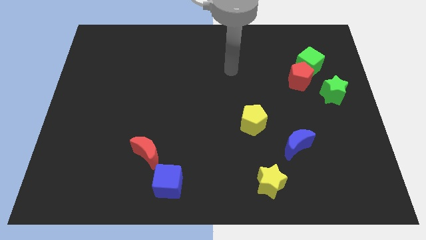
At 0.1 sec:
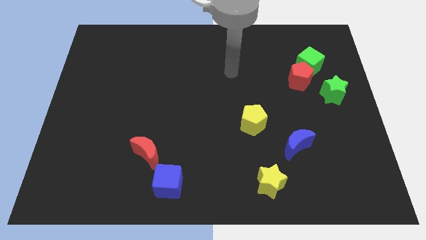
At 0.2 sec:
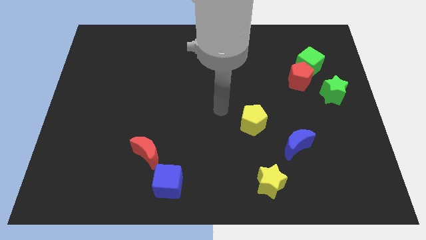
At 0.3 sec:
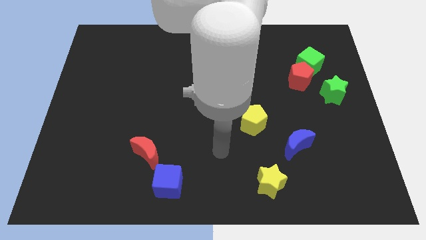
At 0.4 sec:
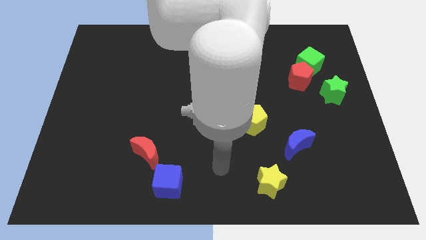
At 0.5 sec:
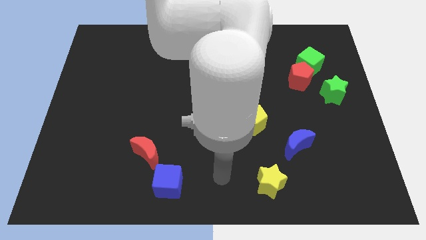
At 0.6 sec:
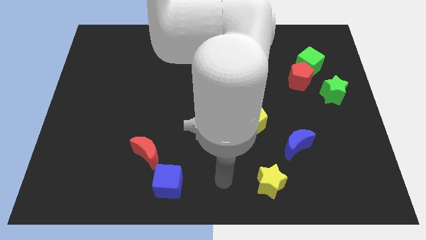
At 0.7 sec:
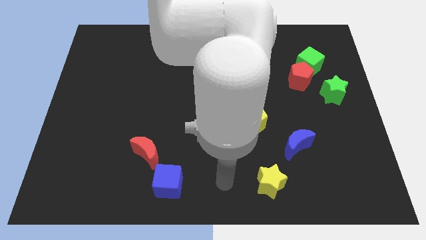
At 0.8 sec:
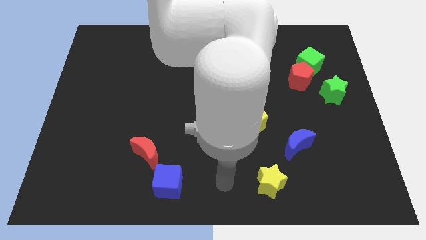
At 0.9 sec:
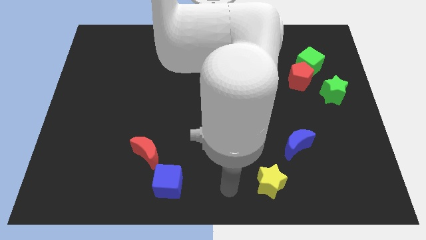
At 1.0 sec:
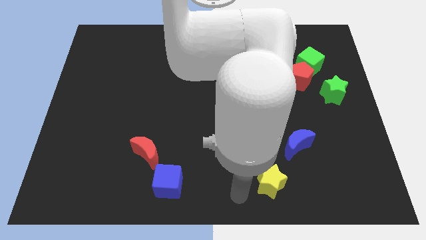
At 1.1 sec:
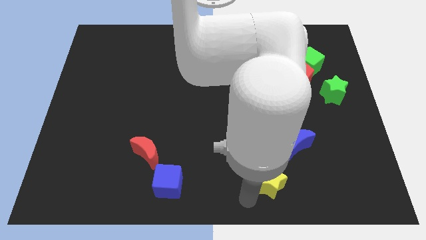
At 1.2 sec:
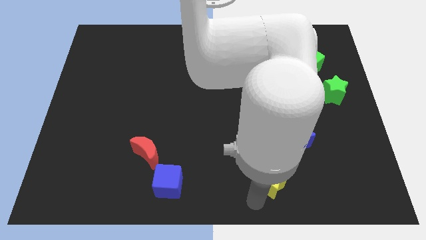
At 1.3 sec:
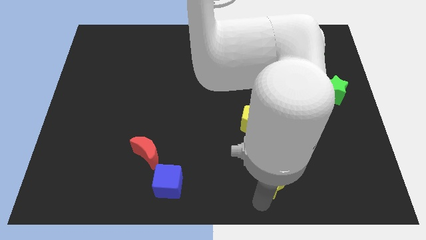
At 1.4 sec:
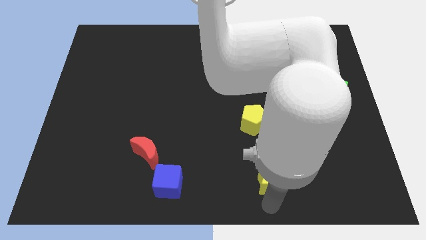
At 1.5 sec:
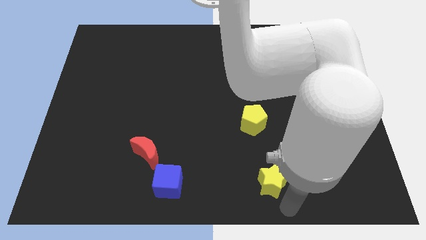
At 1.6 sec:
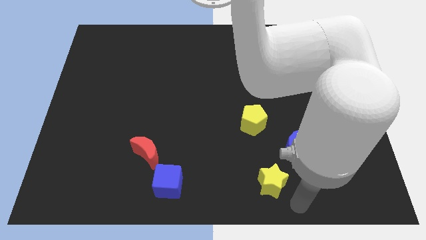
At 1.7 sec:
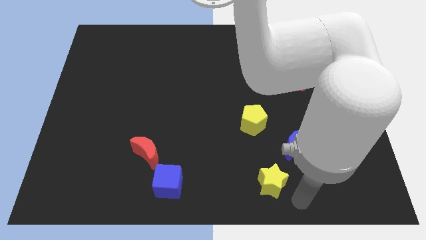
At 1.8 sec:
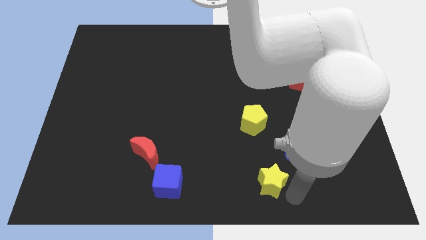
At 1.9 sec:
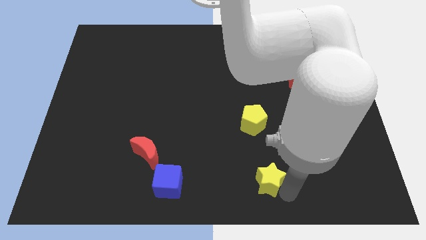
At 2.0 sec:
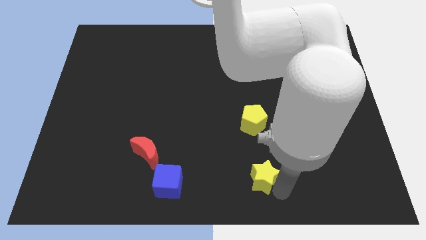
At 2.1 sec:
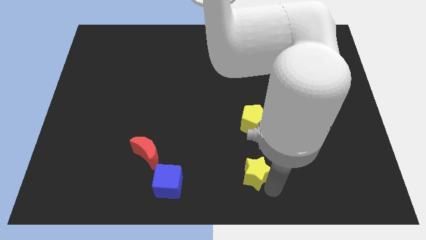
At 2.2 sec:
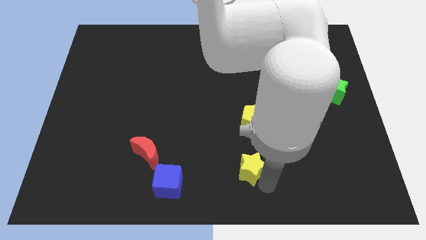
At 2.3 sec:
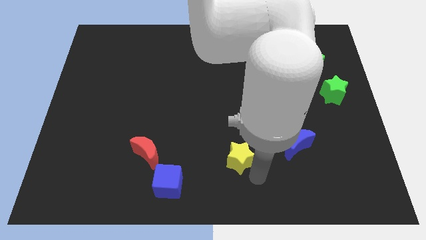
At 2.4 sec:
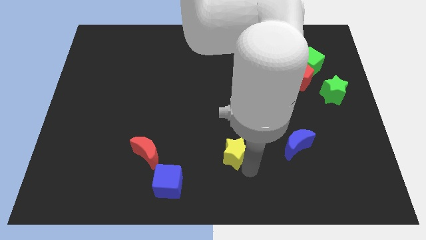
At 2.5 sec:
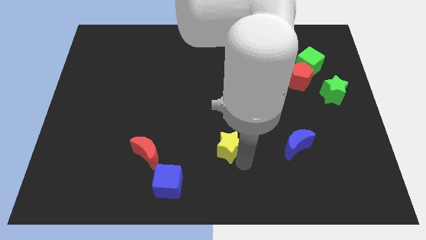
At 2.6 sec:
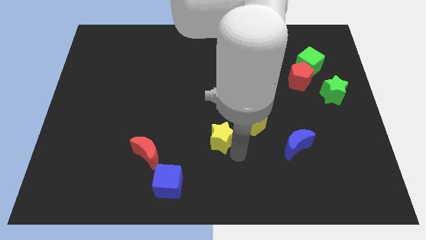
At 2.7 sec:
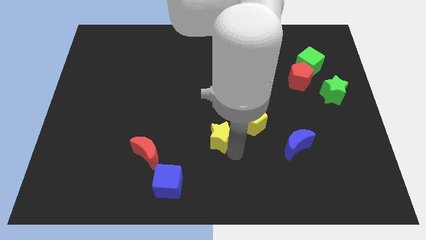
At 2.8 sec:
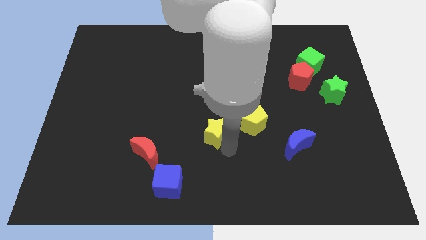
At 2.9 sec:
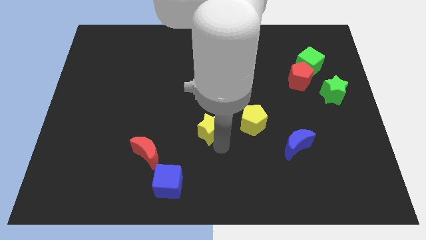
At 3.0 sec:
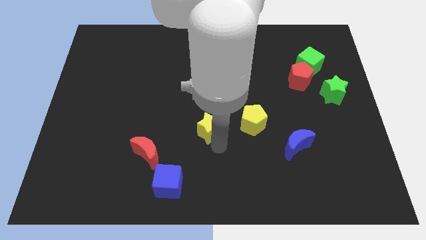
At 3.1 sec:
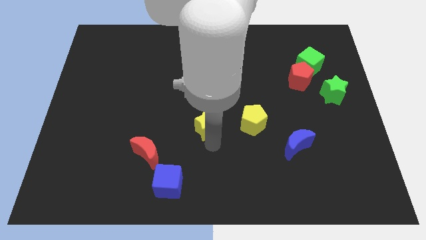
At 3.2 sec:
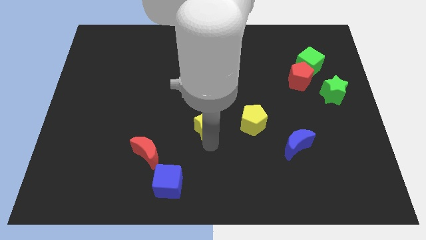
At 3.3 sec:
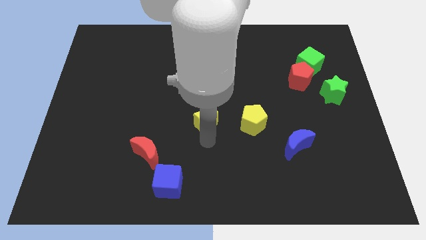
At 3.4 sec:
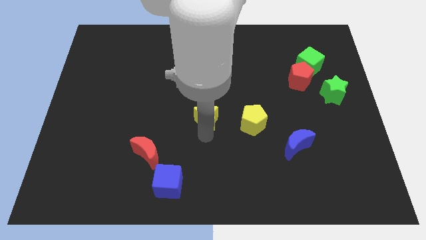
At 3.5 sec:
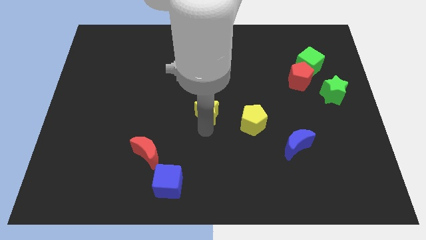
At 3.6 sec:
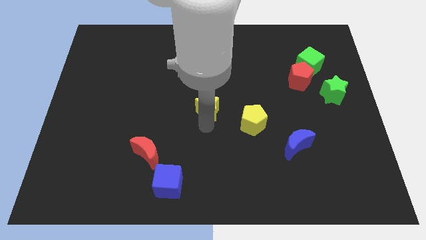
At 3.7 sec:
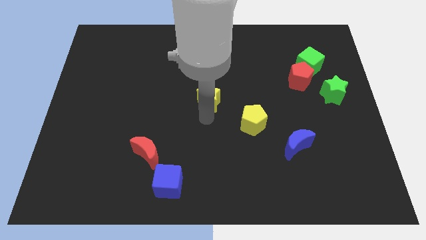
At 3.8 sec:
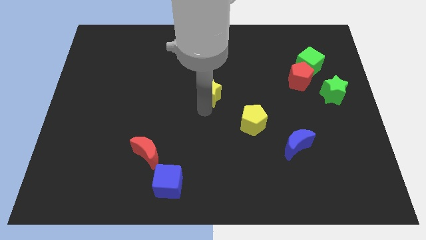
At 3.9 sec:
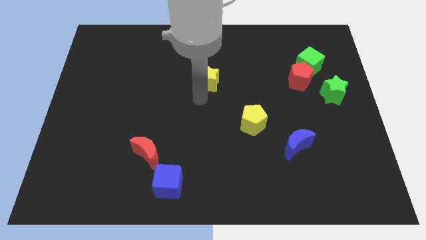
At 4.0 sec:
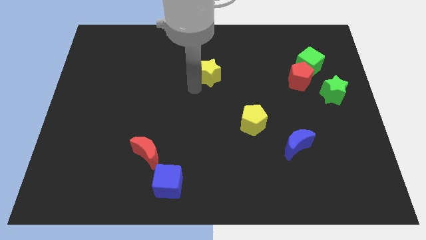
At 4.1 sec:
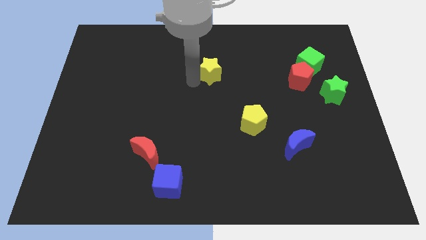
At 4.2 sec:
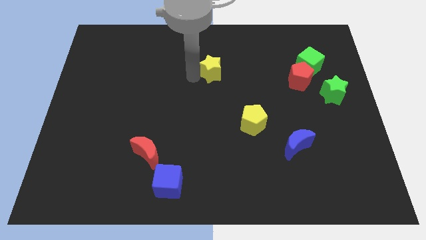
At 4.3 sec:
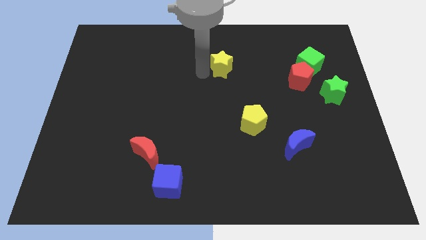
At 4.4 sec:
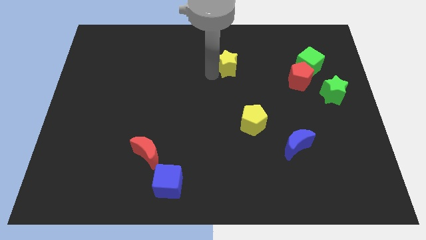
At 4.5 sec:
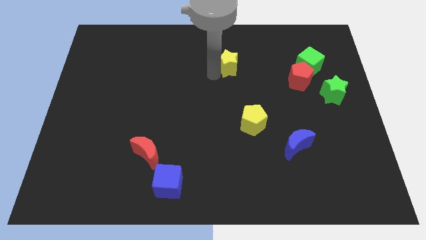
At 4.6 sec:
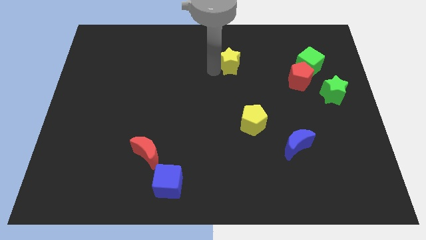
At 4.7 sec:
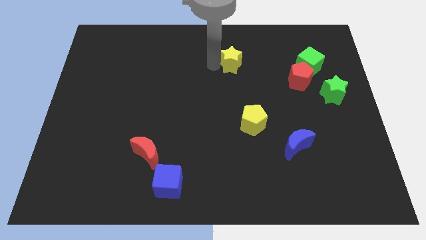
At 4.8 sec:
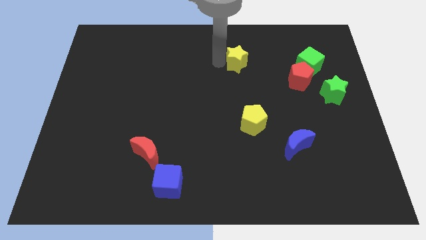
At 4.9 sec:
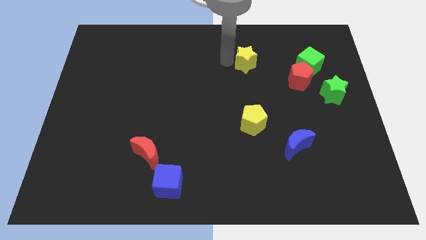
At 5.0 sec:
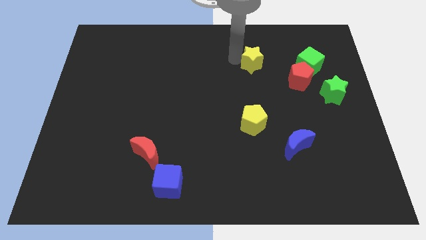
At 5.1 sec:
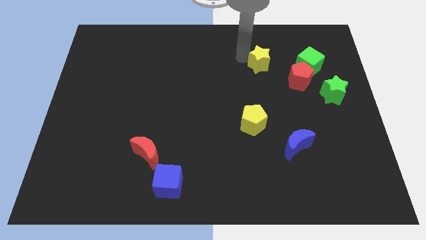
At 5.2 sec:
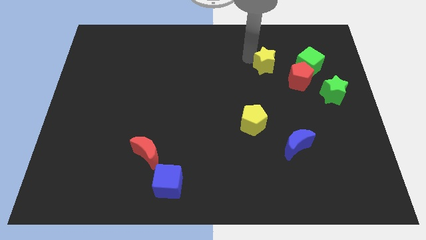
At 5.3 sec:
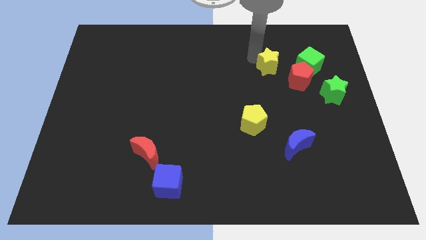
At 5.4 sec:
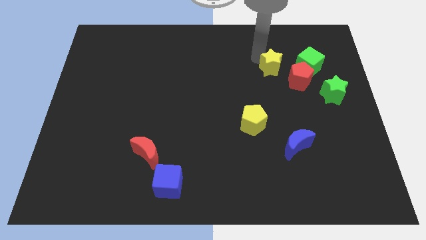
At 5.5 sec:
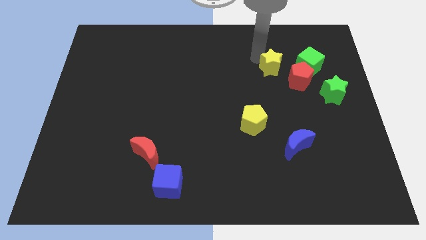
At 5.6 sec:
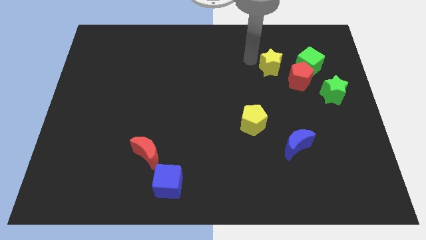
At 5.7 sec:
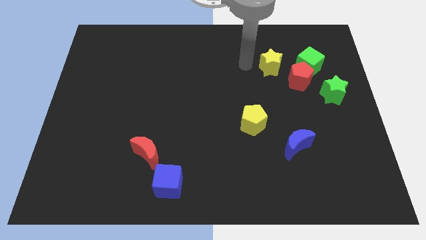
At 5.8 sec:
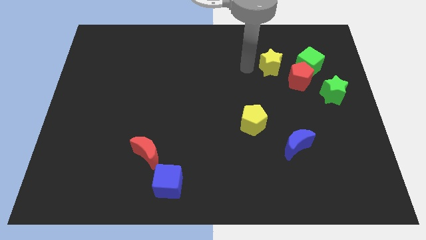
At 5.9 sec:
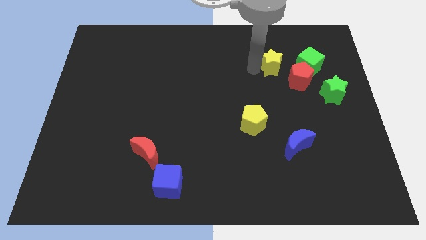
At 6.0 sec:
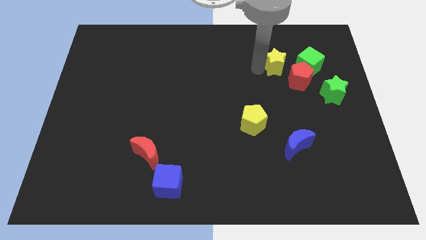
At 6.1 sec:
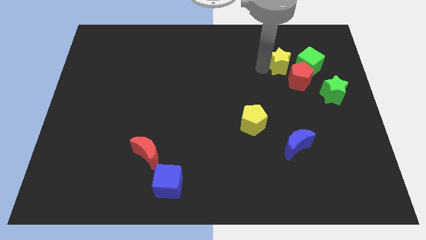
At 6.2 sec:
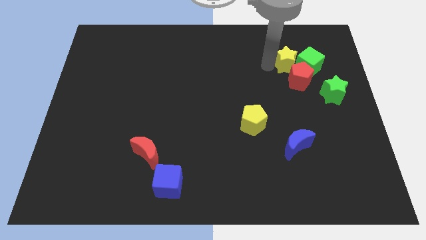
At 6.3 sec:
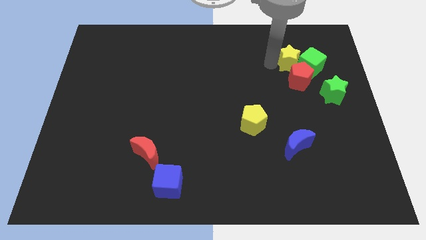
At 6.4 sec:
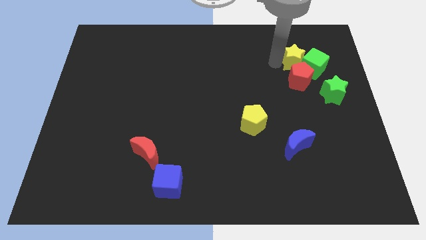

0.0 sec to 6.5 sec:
push the yellow star to the green cube

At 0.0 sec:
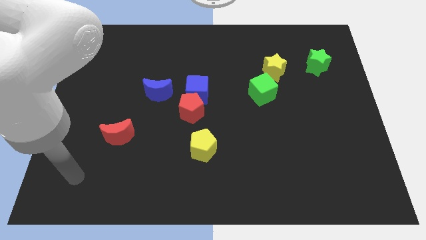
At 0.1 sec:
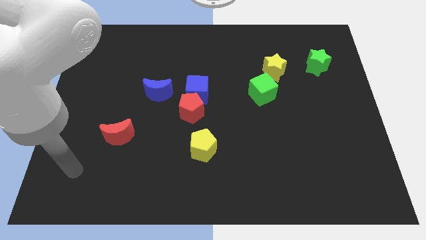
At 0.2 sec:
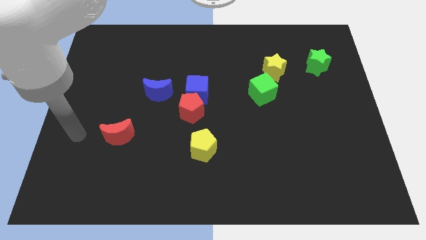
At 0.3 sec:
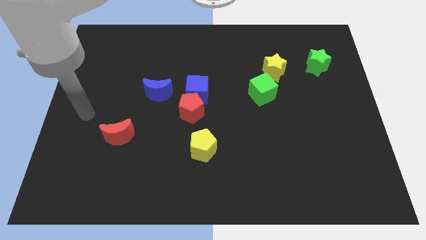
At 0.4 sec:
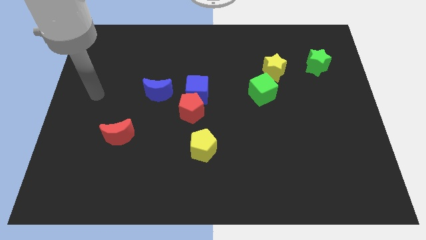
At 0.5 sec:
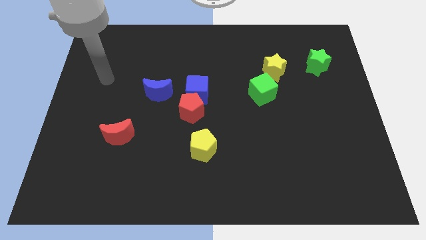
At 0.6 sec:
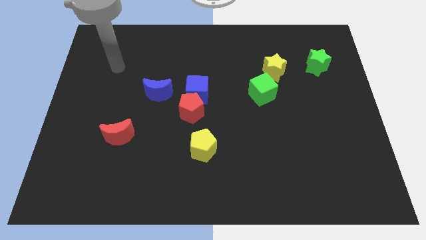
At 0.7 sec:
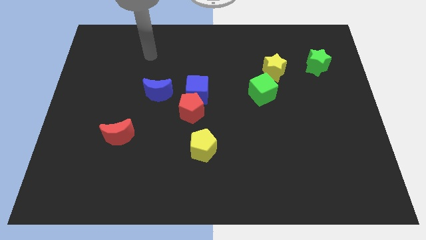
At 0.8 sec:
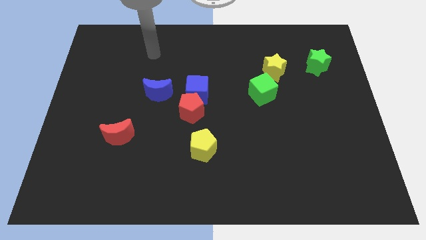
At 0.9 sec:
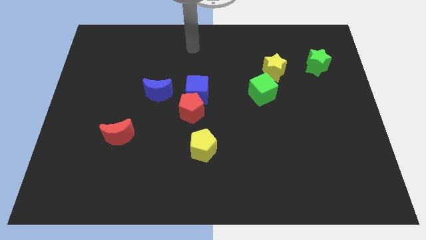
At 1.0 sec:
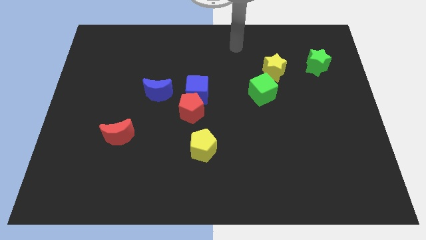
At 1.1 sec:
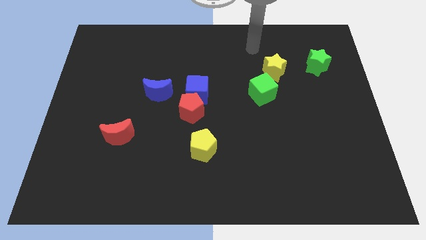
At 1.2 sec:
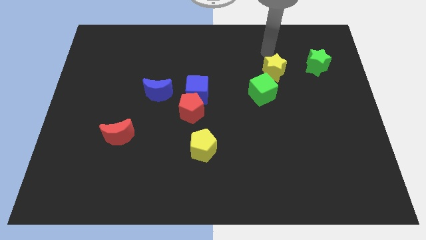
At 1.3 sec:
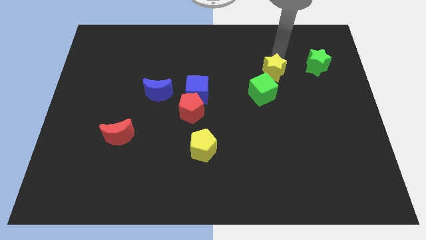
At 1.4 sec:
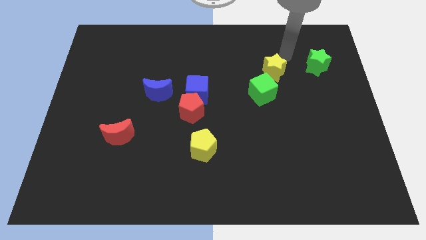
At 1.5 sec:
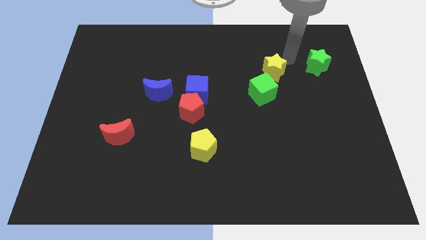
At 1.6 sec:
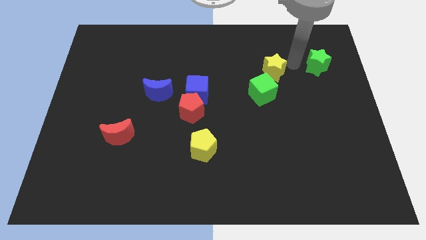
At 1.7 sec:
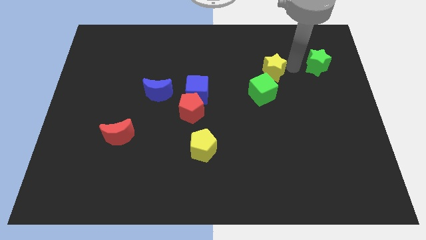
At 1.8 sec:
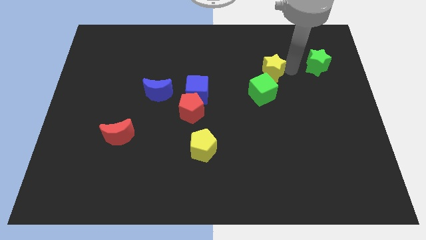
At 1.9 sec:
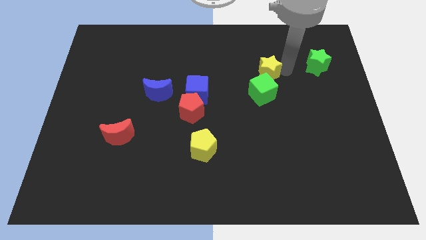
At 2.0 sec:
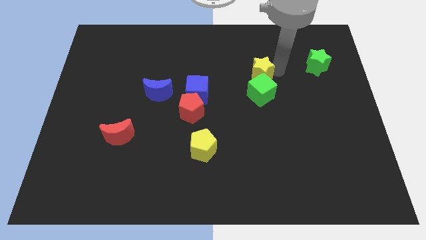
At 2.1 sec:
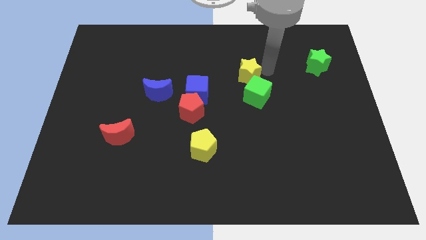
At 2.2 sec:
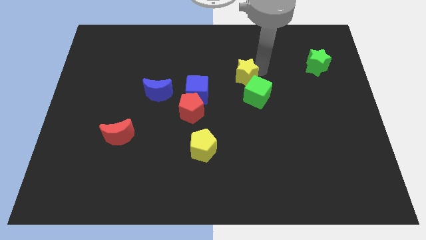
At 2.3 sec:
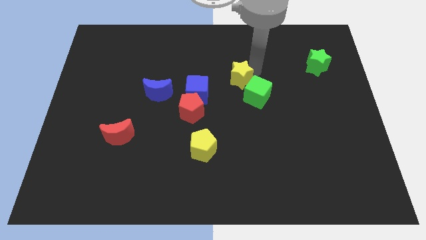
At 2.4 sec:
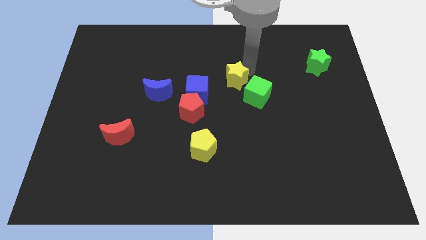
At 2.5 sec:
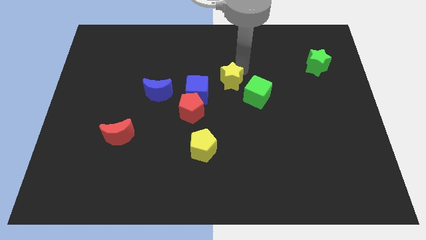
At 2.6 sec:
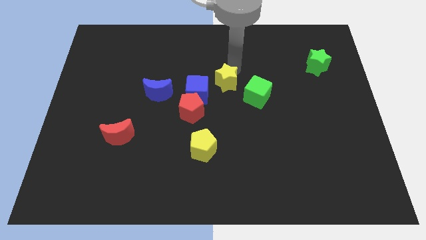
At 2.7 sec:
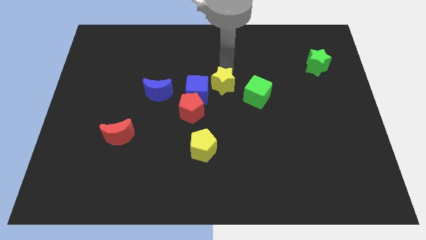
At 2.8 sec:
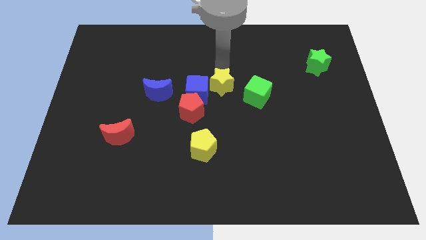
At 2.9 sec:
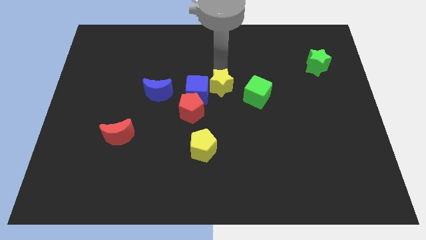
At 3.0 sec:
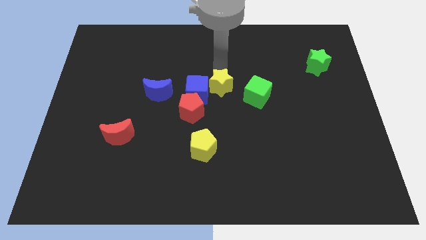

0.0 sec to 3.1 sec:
put the yellow star to the blue cube
